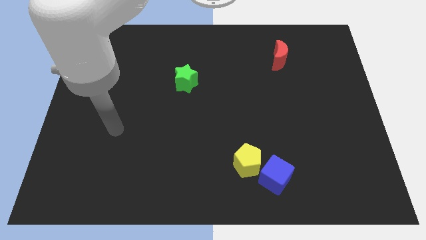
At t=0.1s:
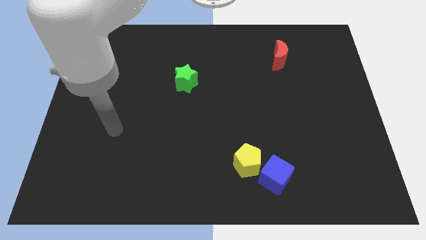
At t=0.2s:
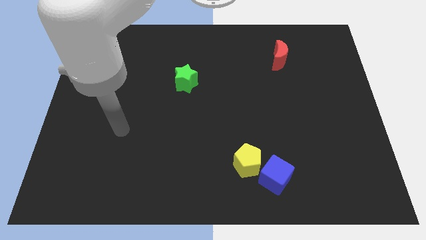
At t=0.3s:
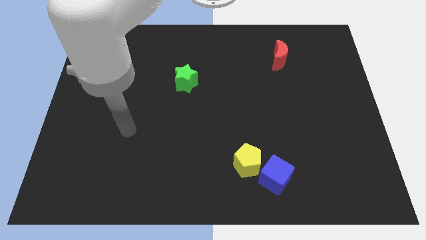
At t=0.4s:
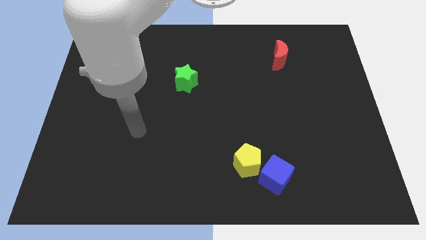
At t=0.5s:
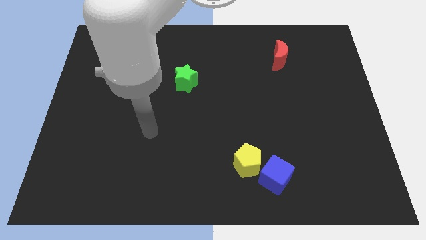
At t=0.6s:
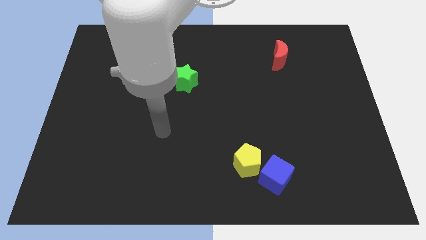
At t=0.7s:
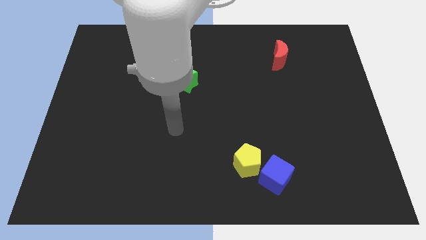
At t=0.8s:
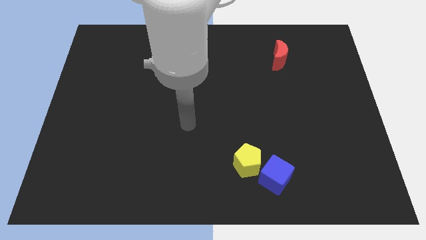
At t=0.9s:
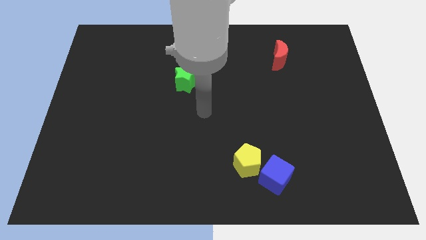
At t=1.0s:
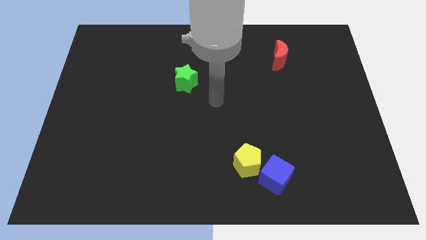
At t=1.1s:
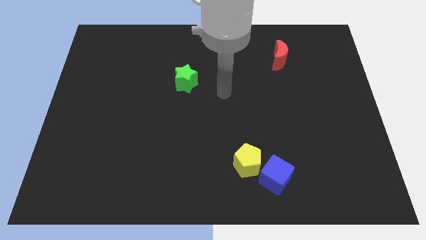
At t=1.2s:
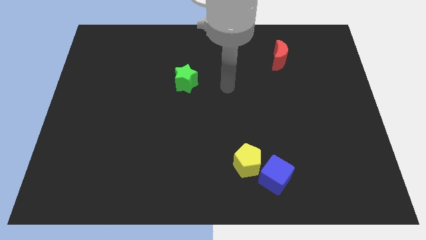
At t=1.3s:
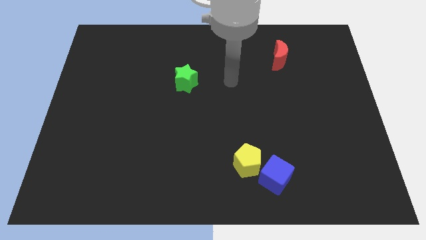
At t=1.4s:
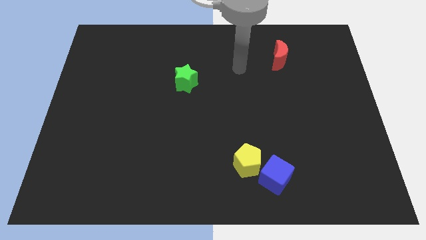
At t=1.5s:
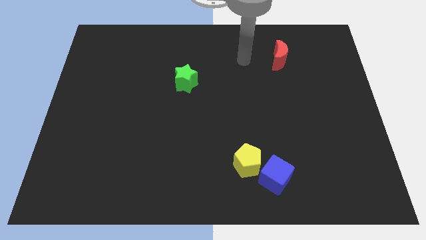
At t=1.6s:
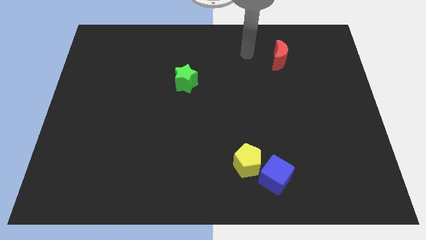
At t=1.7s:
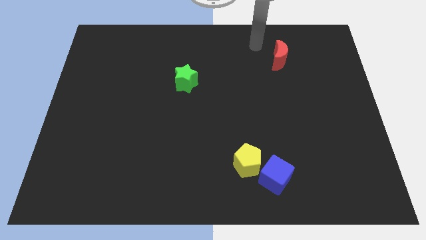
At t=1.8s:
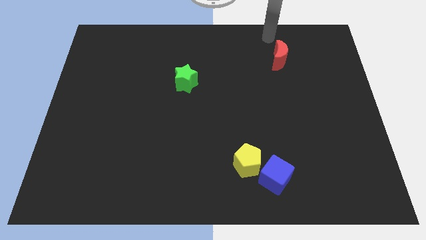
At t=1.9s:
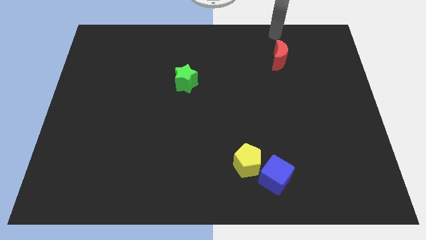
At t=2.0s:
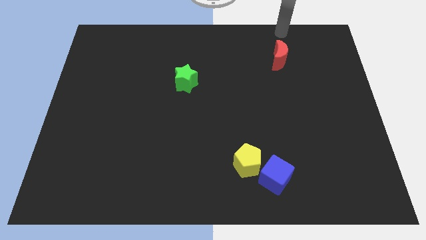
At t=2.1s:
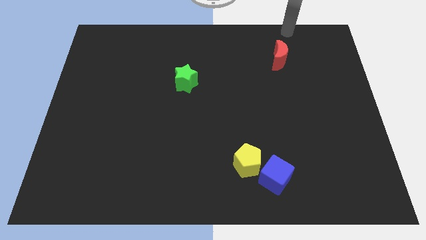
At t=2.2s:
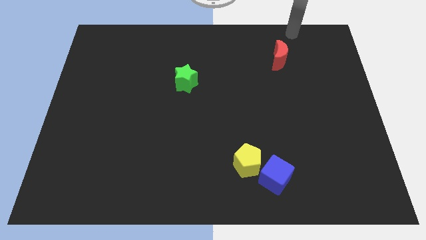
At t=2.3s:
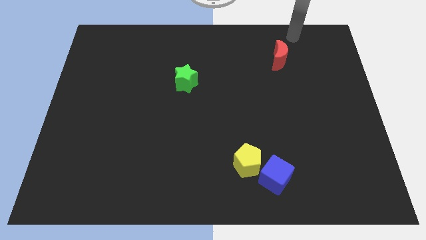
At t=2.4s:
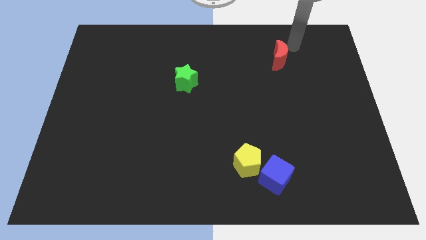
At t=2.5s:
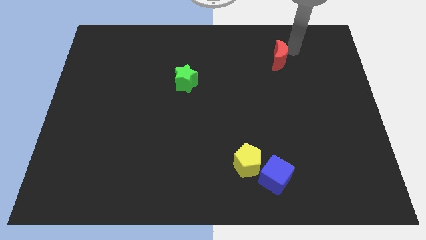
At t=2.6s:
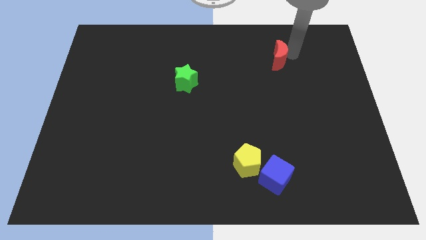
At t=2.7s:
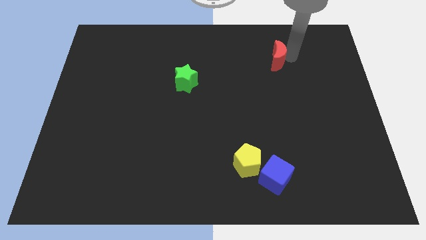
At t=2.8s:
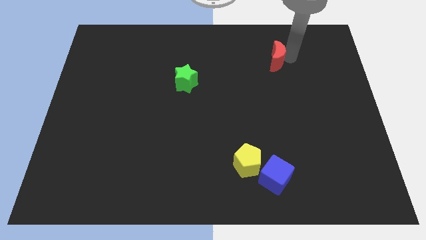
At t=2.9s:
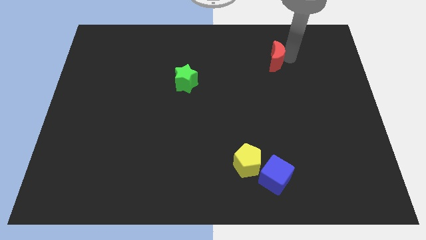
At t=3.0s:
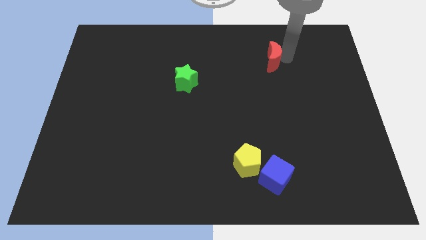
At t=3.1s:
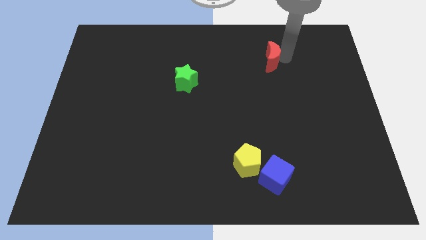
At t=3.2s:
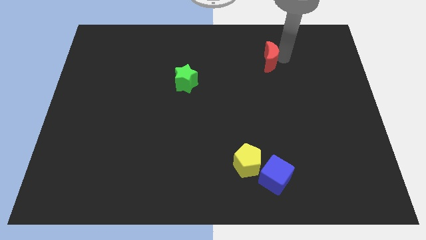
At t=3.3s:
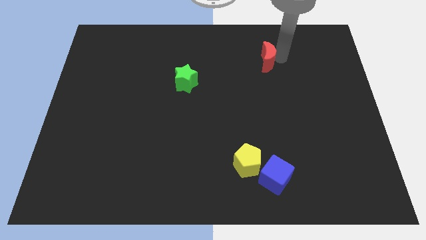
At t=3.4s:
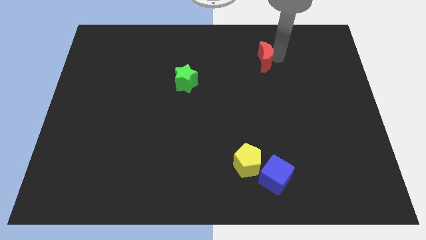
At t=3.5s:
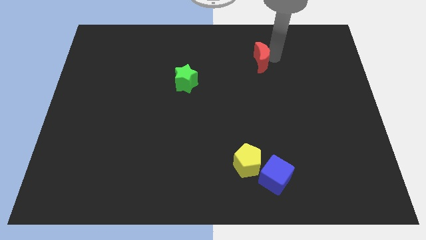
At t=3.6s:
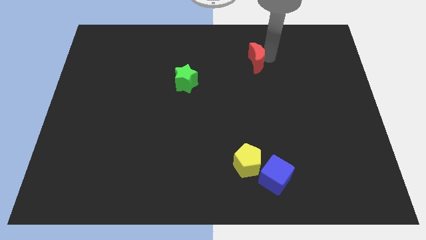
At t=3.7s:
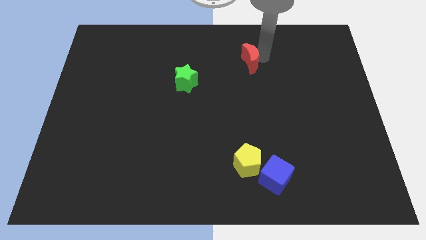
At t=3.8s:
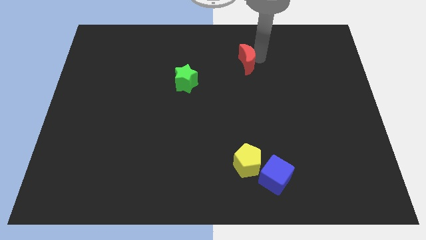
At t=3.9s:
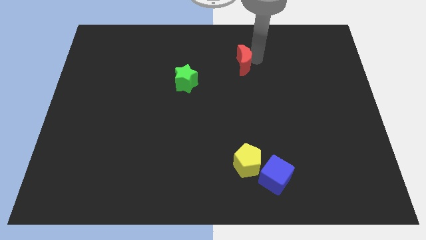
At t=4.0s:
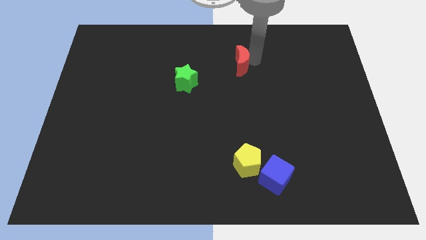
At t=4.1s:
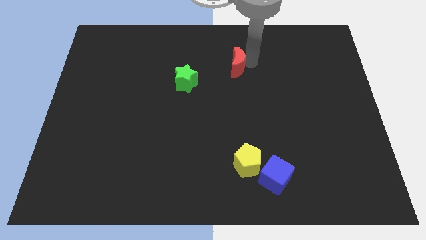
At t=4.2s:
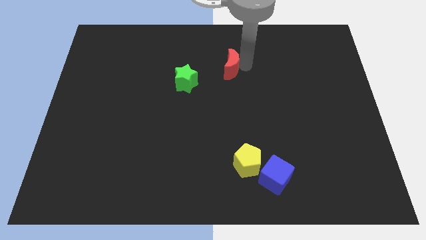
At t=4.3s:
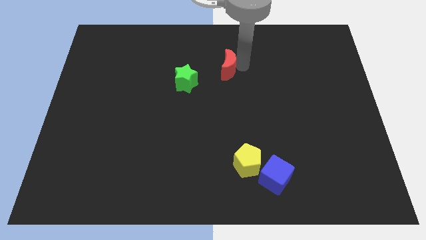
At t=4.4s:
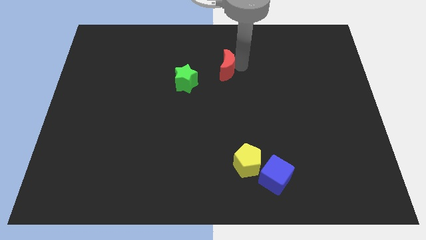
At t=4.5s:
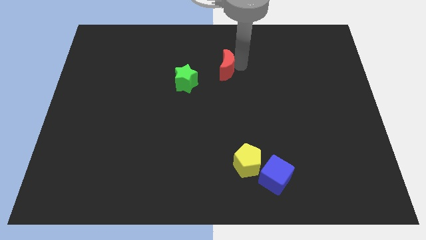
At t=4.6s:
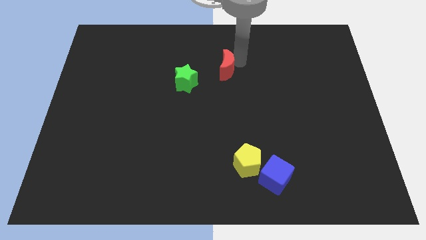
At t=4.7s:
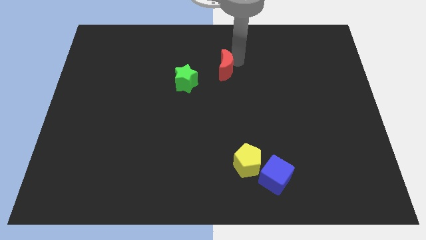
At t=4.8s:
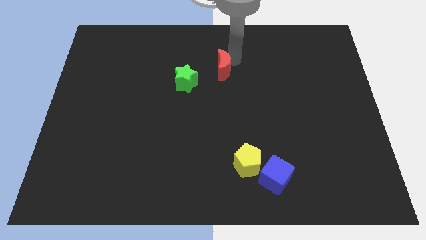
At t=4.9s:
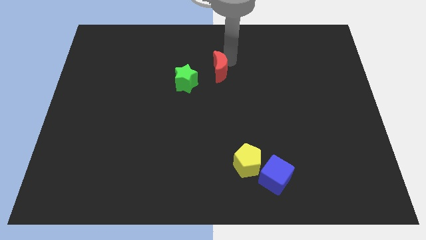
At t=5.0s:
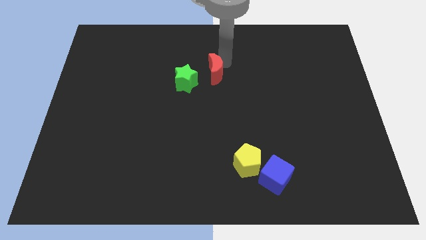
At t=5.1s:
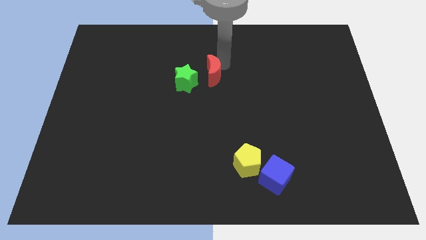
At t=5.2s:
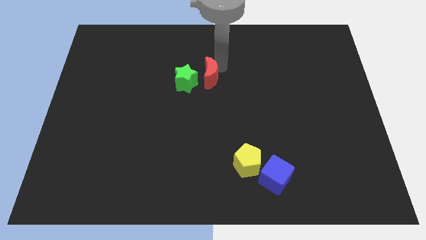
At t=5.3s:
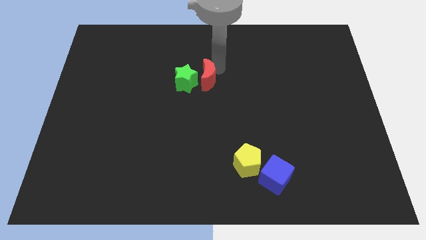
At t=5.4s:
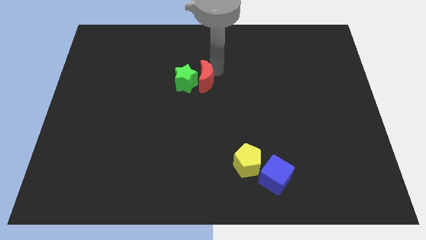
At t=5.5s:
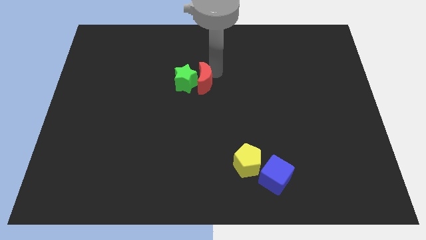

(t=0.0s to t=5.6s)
move the moon close to the green star

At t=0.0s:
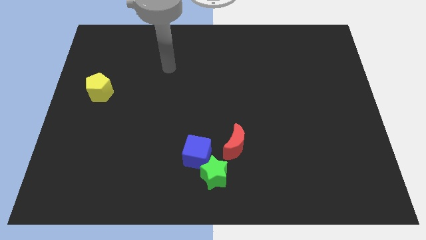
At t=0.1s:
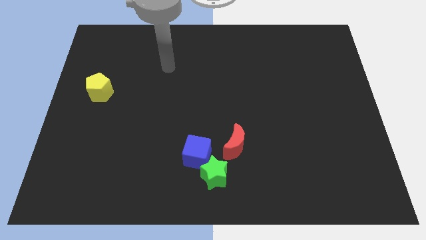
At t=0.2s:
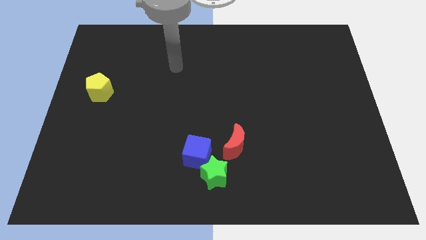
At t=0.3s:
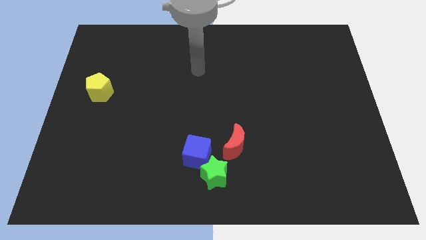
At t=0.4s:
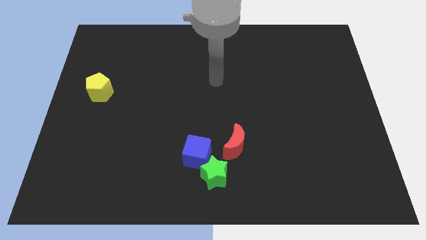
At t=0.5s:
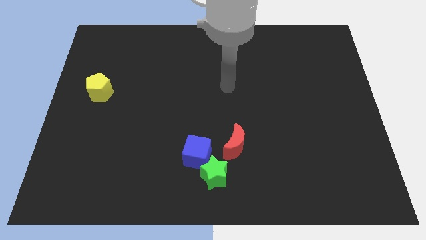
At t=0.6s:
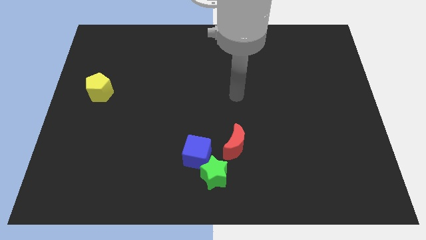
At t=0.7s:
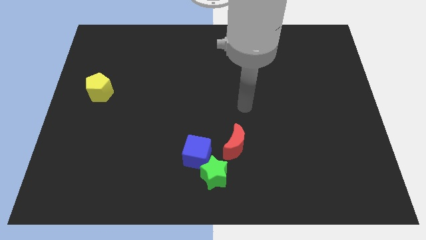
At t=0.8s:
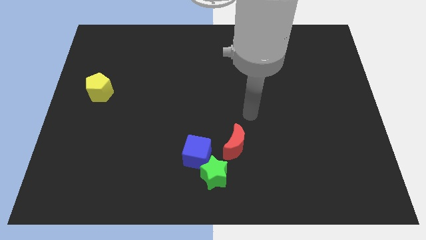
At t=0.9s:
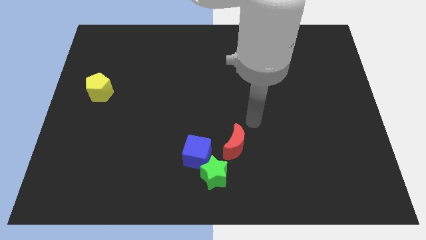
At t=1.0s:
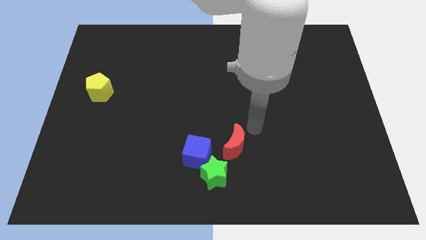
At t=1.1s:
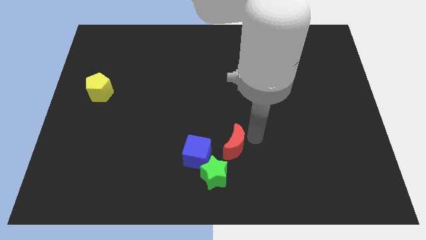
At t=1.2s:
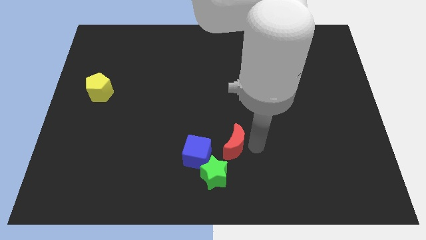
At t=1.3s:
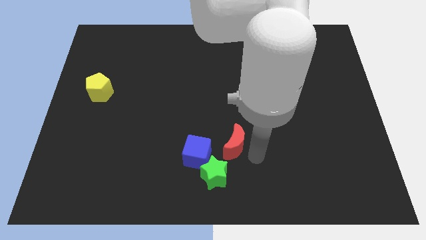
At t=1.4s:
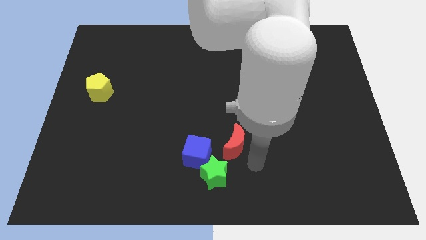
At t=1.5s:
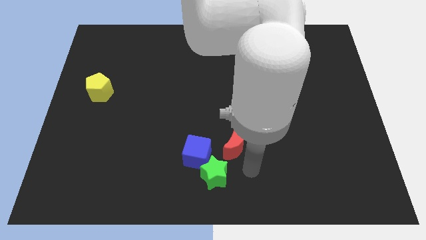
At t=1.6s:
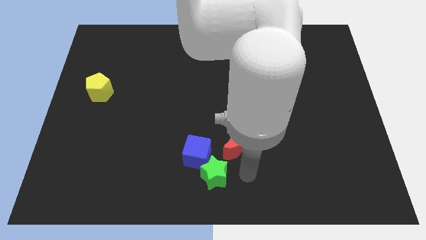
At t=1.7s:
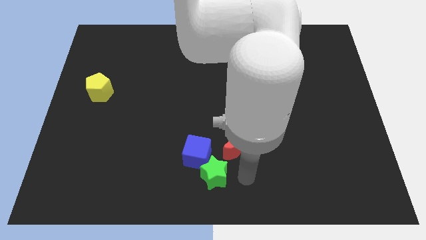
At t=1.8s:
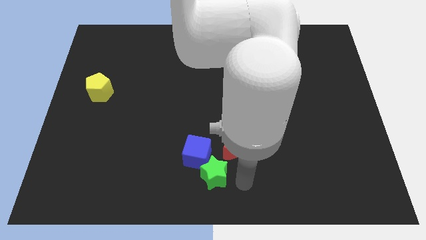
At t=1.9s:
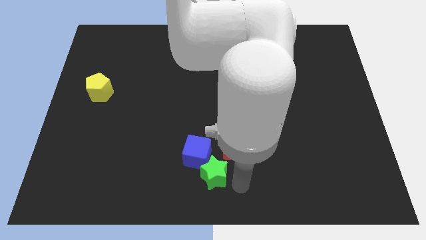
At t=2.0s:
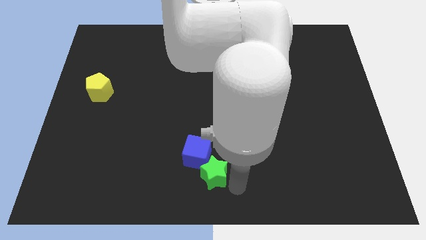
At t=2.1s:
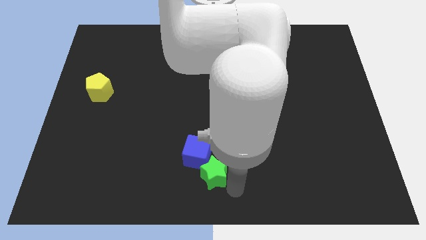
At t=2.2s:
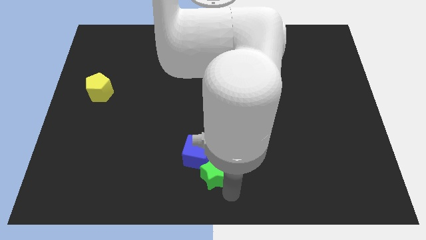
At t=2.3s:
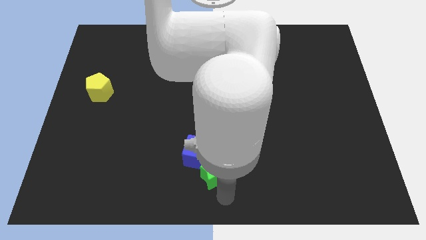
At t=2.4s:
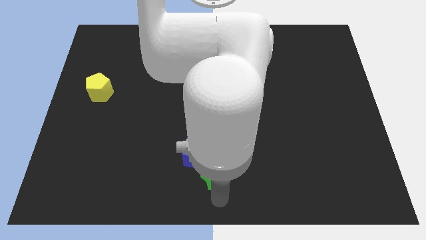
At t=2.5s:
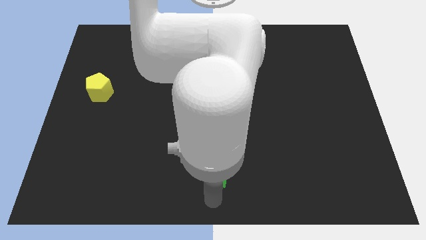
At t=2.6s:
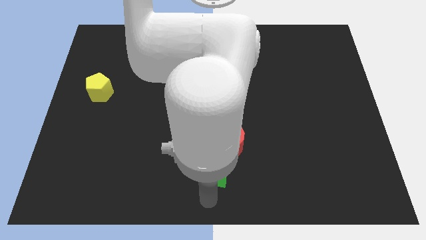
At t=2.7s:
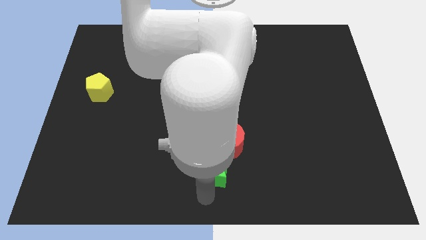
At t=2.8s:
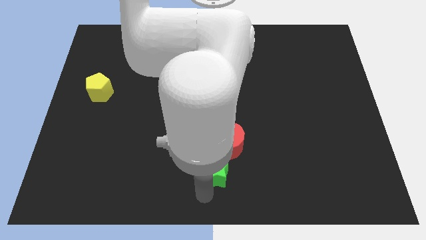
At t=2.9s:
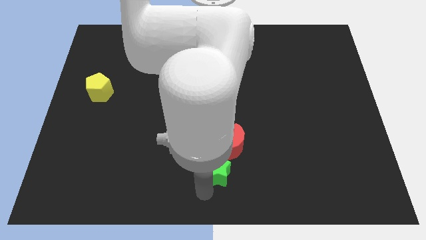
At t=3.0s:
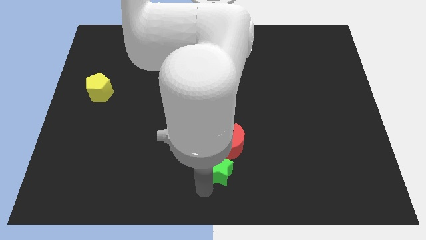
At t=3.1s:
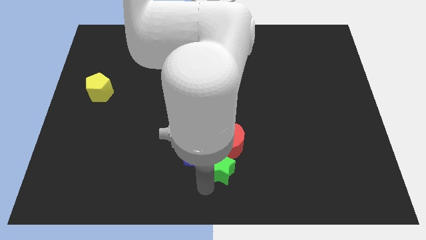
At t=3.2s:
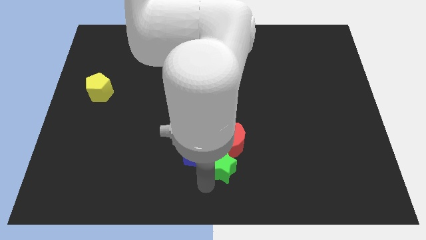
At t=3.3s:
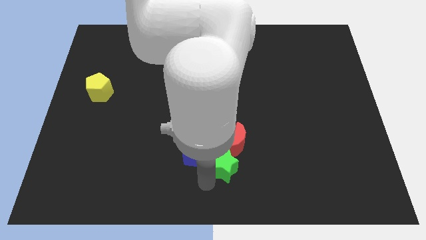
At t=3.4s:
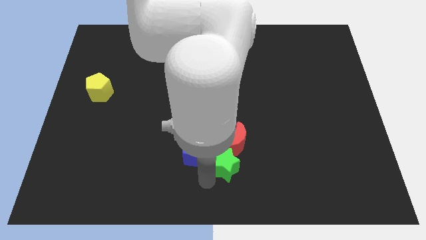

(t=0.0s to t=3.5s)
slide the green star to the moon
